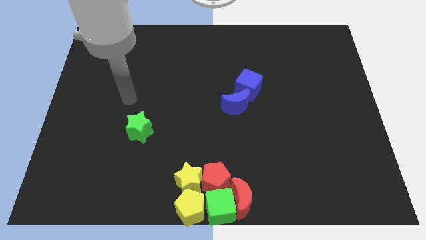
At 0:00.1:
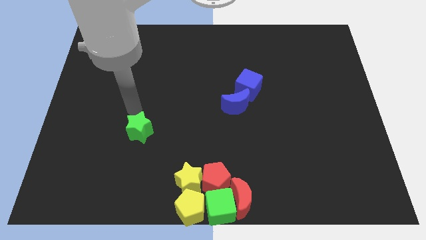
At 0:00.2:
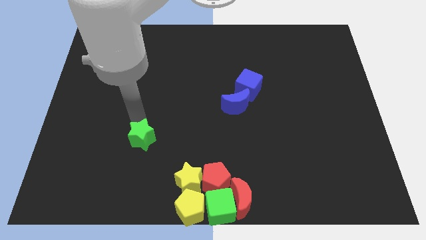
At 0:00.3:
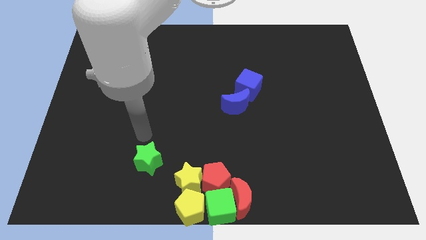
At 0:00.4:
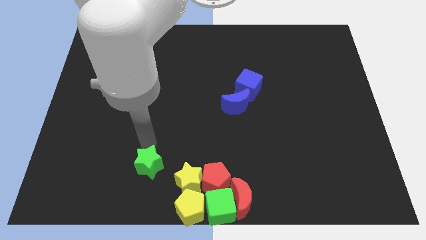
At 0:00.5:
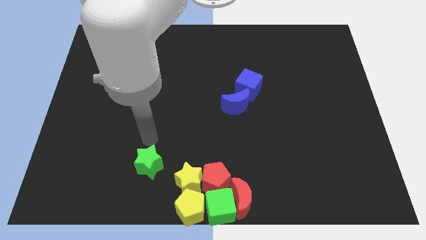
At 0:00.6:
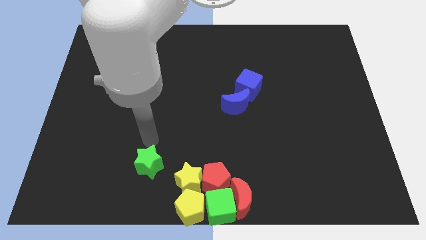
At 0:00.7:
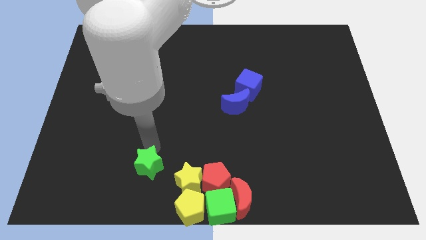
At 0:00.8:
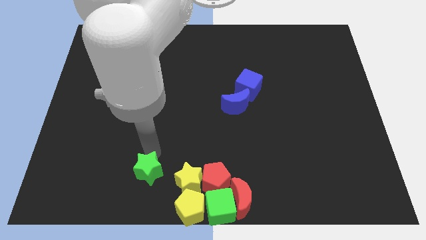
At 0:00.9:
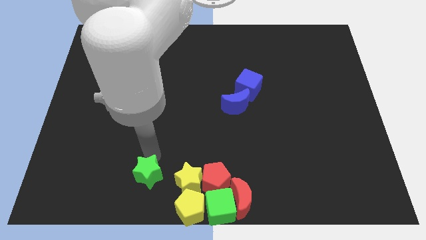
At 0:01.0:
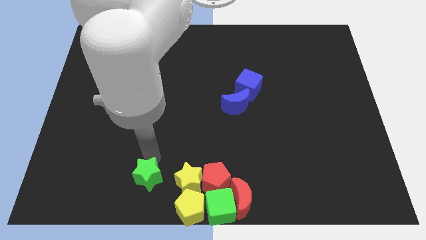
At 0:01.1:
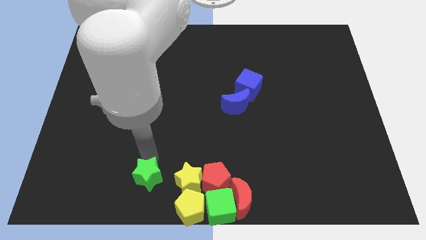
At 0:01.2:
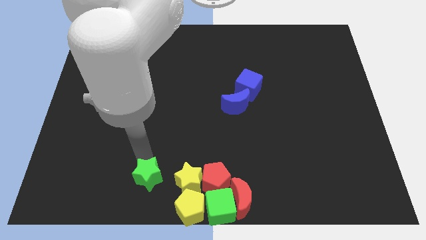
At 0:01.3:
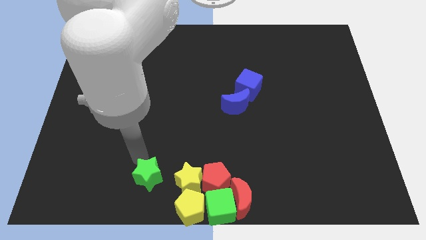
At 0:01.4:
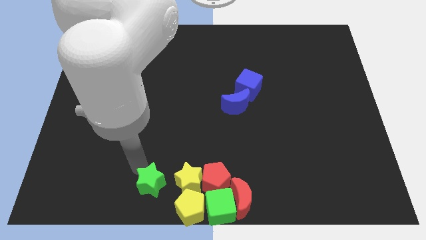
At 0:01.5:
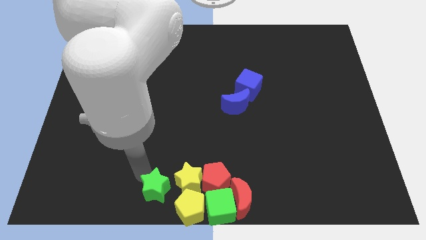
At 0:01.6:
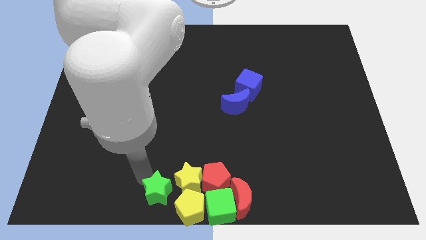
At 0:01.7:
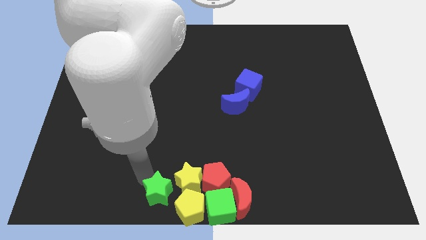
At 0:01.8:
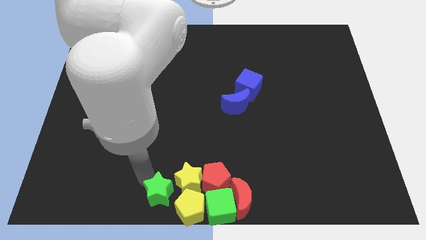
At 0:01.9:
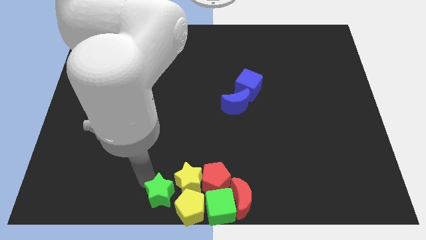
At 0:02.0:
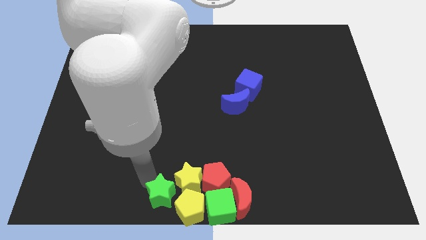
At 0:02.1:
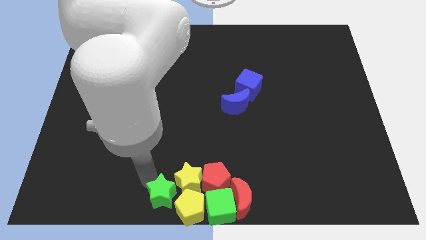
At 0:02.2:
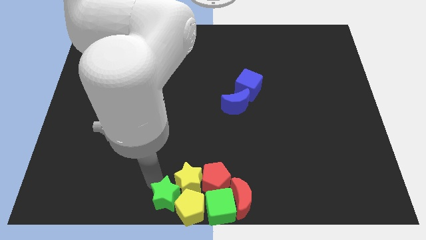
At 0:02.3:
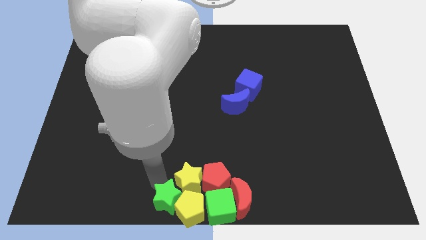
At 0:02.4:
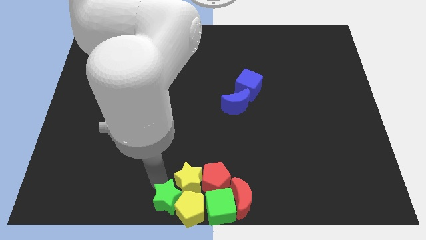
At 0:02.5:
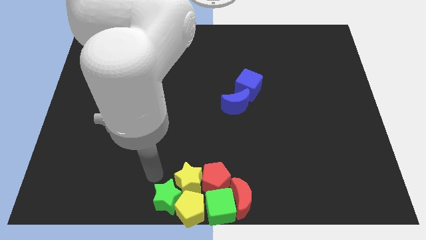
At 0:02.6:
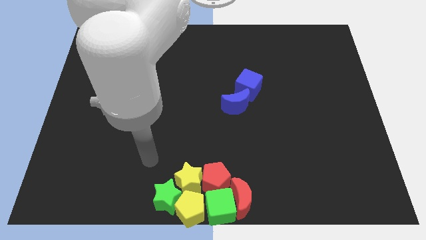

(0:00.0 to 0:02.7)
push the green star in to the yellow pentagon

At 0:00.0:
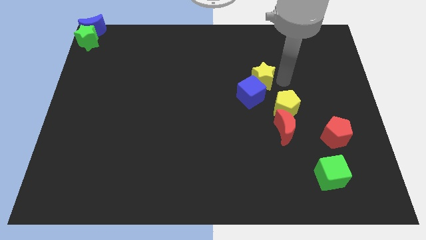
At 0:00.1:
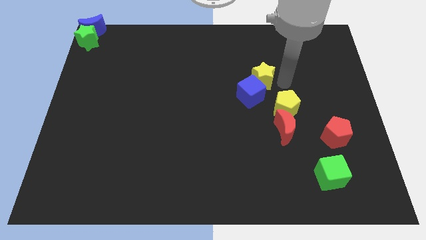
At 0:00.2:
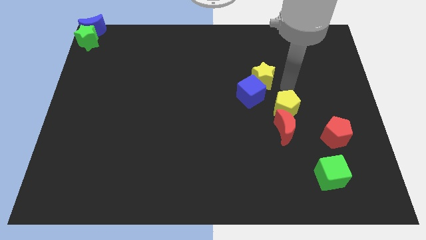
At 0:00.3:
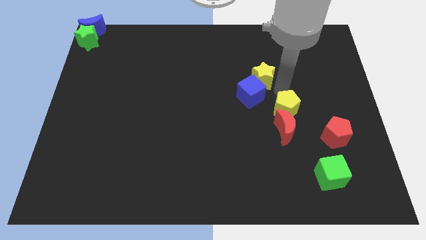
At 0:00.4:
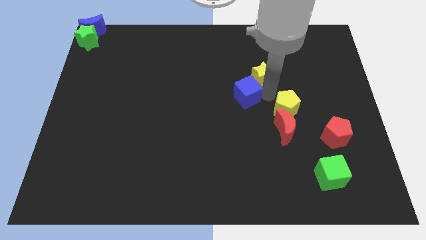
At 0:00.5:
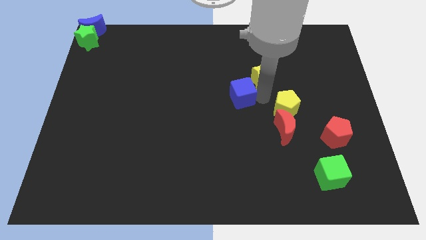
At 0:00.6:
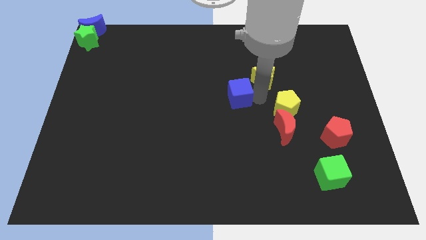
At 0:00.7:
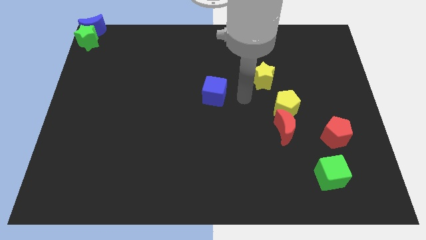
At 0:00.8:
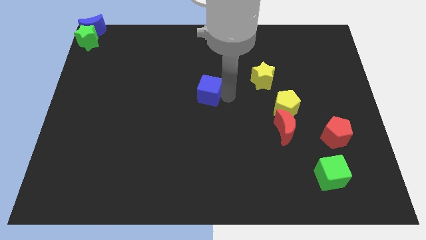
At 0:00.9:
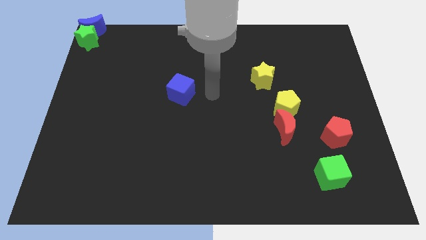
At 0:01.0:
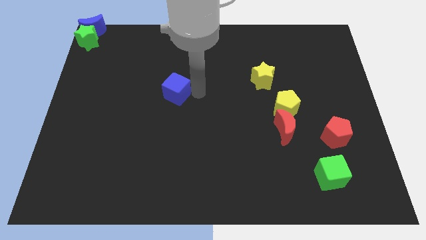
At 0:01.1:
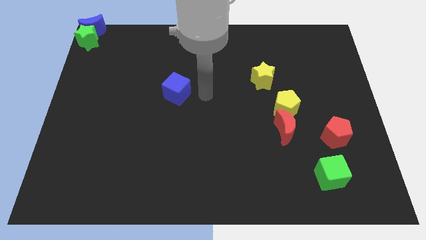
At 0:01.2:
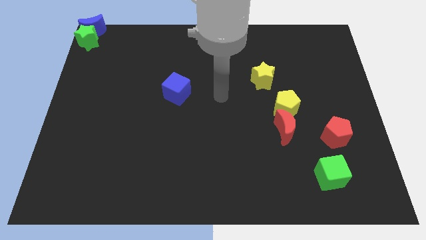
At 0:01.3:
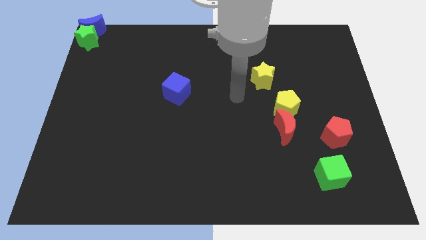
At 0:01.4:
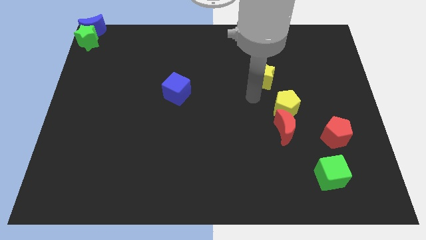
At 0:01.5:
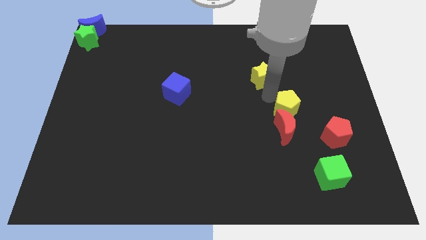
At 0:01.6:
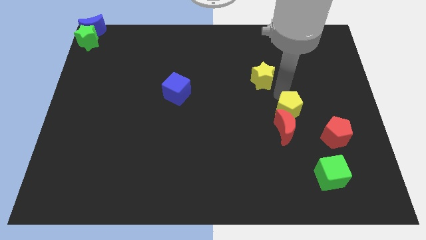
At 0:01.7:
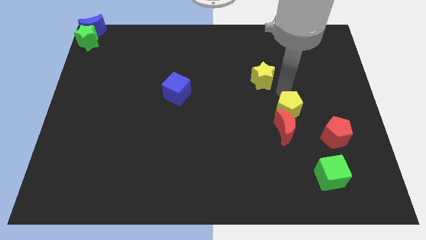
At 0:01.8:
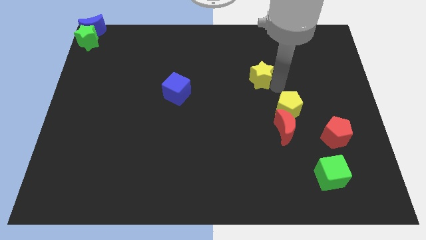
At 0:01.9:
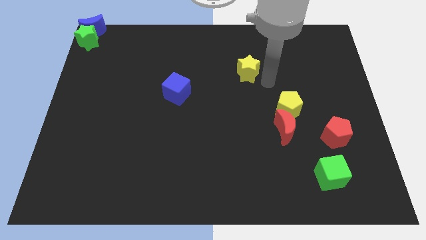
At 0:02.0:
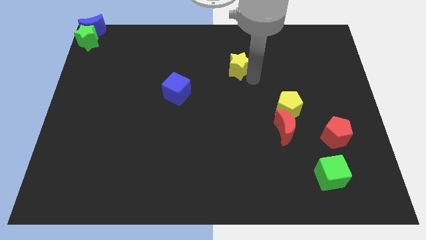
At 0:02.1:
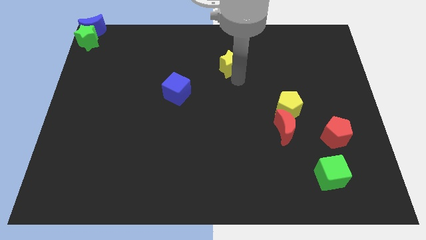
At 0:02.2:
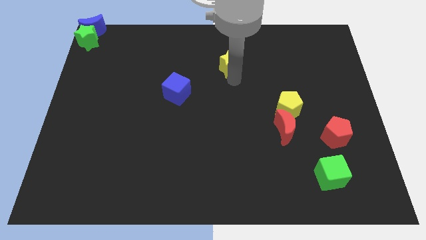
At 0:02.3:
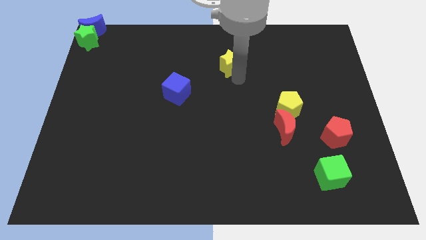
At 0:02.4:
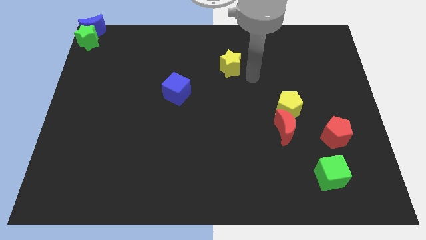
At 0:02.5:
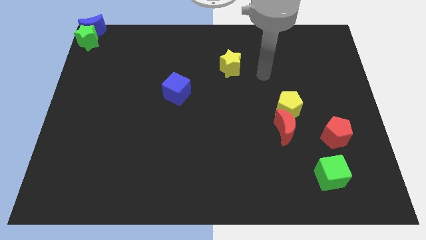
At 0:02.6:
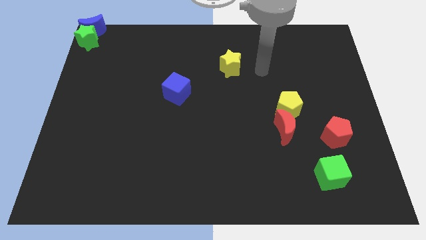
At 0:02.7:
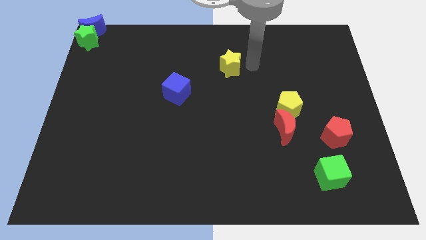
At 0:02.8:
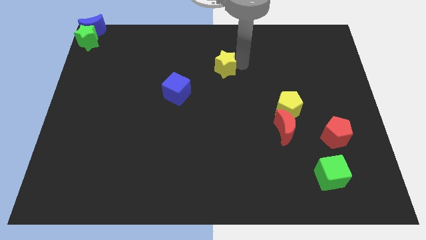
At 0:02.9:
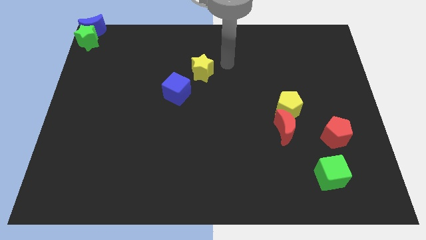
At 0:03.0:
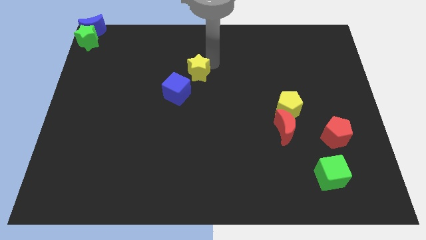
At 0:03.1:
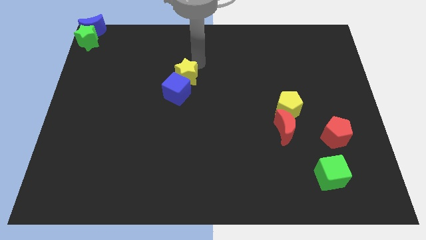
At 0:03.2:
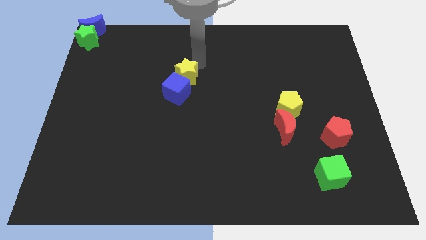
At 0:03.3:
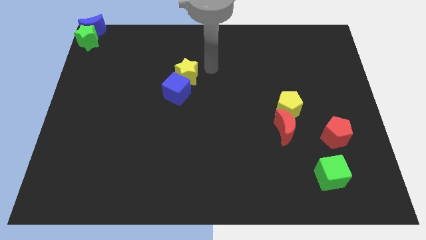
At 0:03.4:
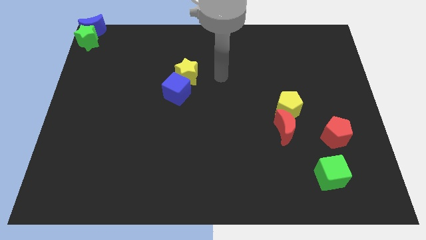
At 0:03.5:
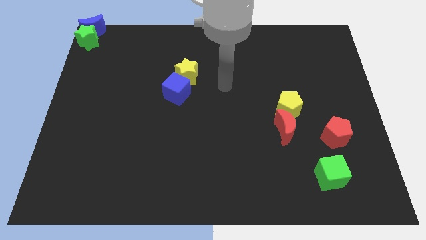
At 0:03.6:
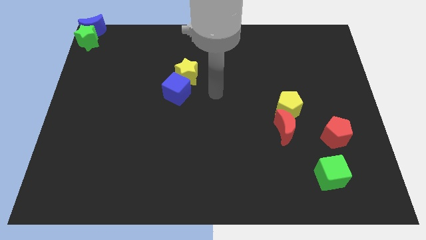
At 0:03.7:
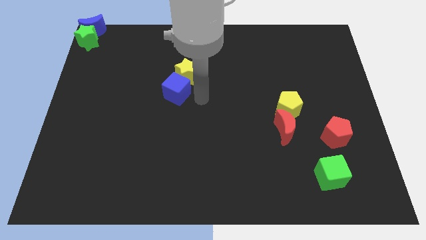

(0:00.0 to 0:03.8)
move the yellow star and blue cube to the left

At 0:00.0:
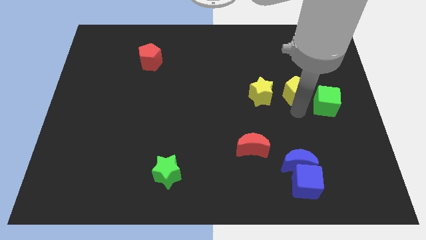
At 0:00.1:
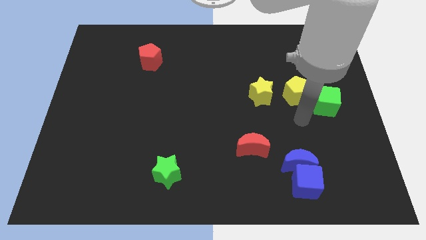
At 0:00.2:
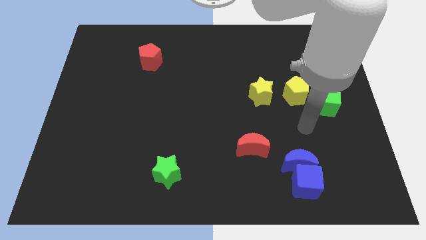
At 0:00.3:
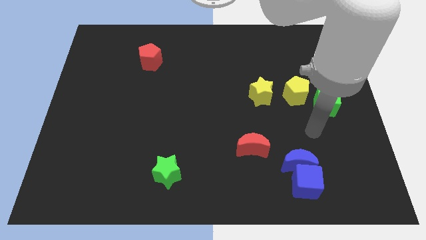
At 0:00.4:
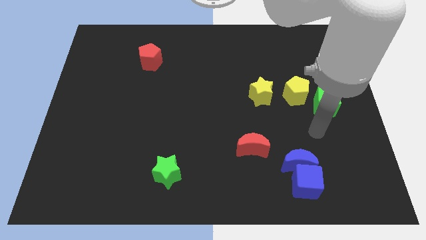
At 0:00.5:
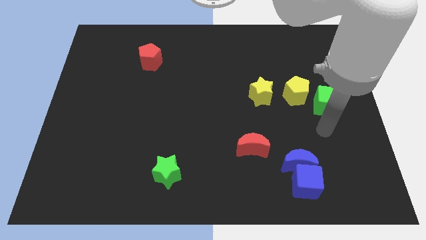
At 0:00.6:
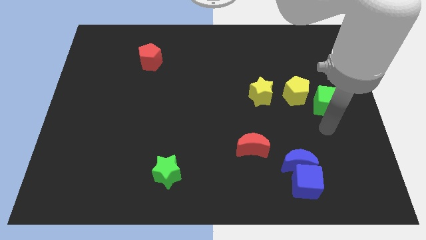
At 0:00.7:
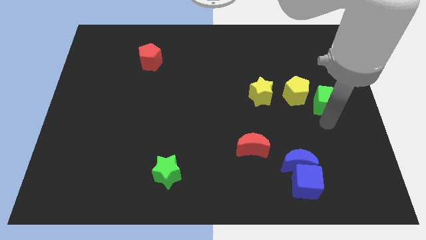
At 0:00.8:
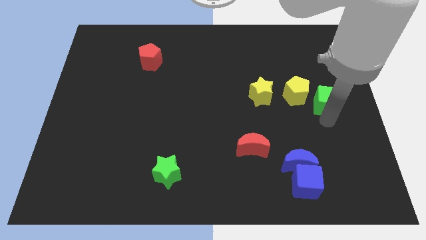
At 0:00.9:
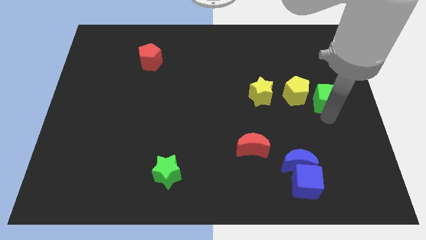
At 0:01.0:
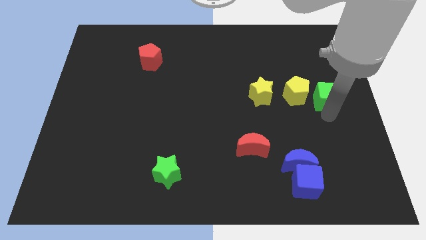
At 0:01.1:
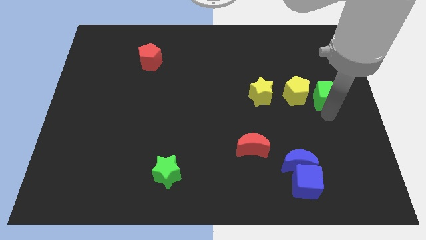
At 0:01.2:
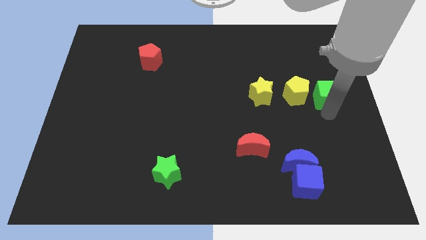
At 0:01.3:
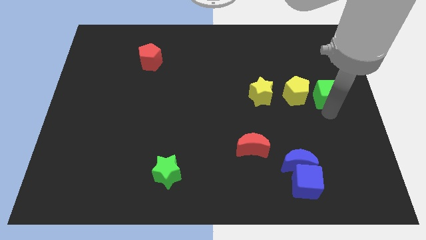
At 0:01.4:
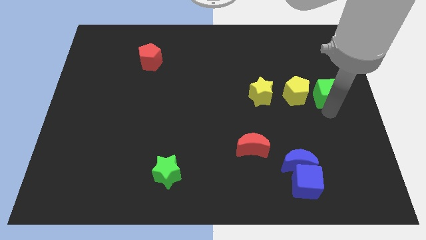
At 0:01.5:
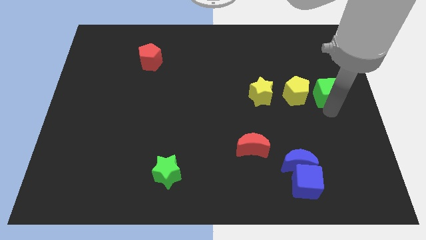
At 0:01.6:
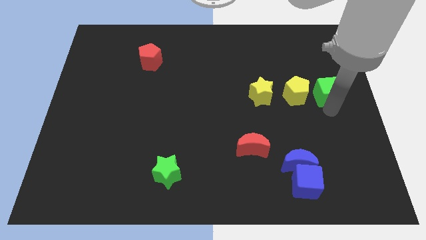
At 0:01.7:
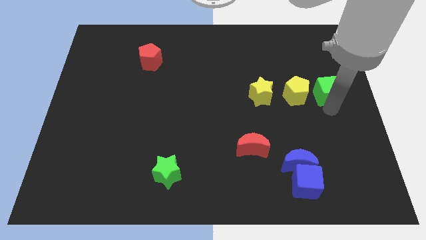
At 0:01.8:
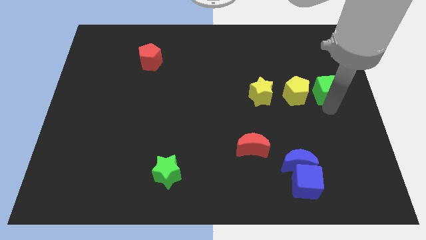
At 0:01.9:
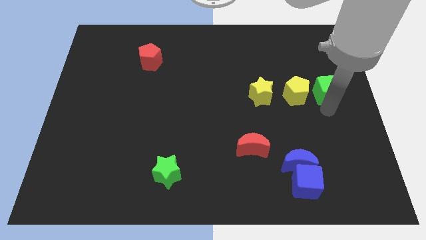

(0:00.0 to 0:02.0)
push the green cube slightly towards up

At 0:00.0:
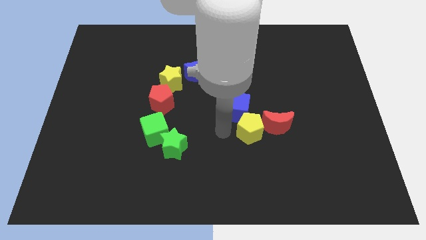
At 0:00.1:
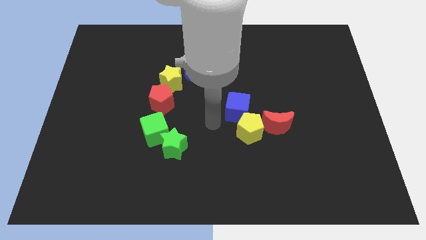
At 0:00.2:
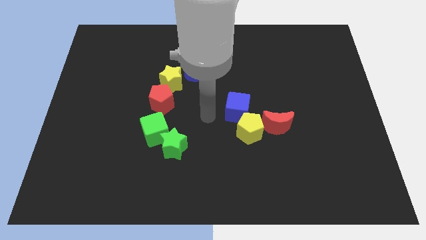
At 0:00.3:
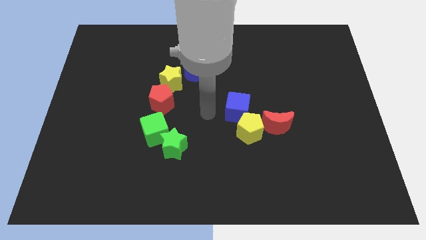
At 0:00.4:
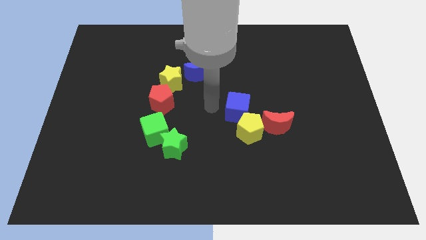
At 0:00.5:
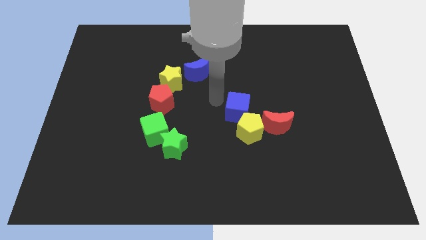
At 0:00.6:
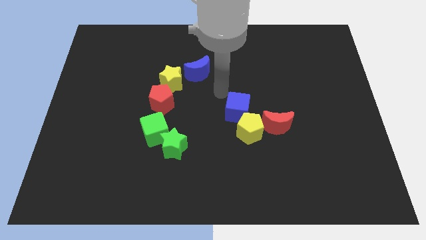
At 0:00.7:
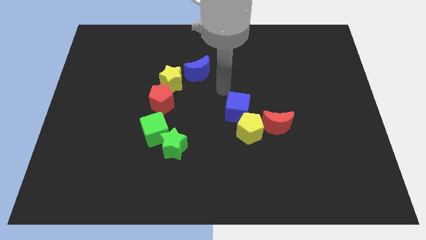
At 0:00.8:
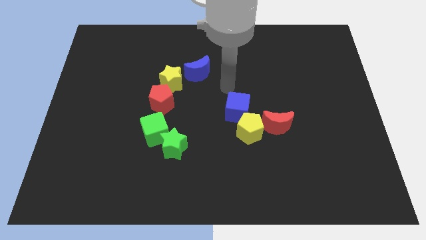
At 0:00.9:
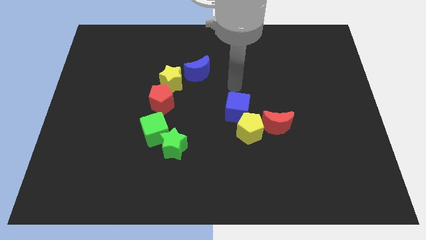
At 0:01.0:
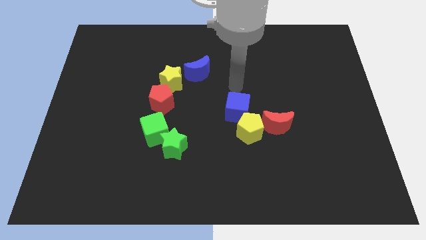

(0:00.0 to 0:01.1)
point your arm at the top of the blue cube
